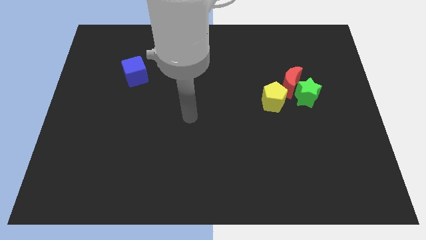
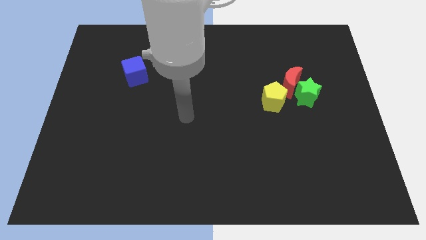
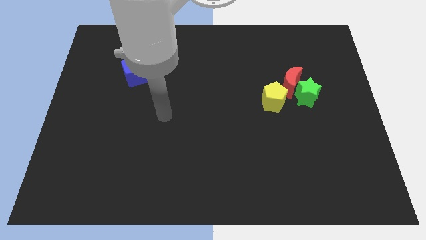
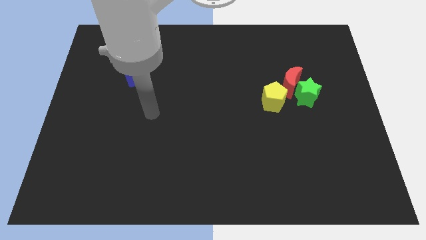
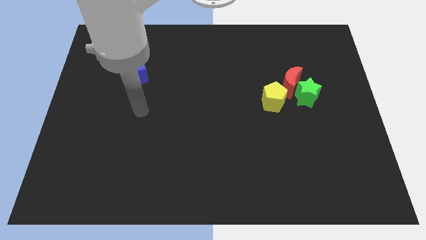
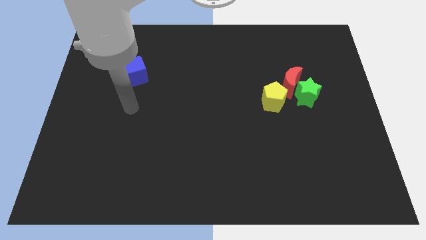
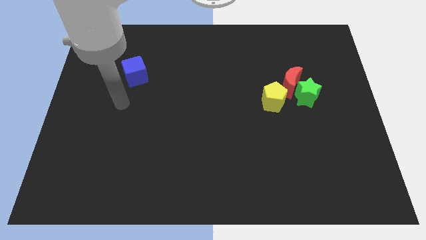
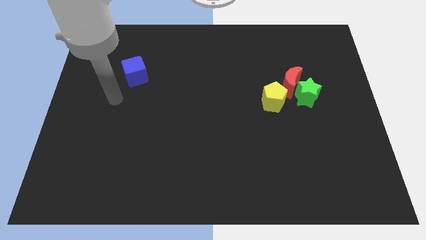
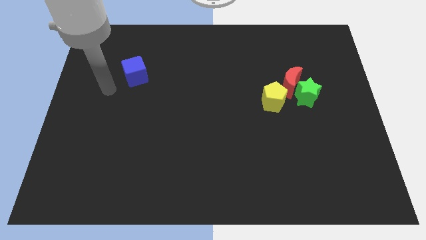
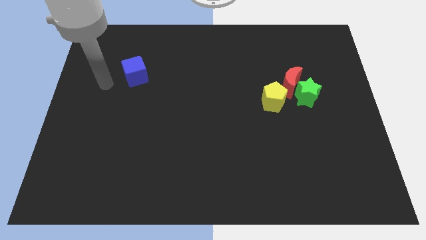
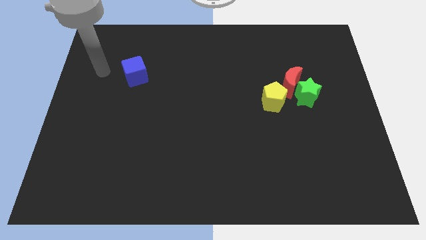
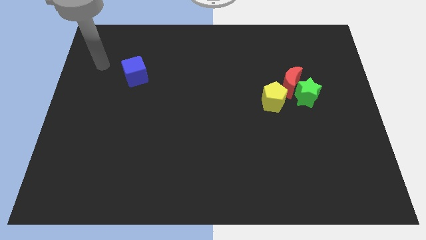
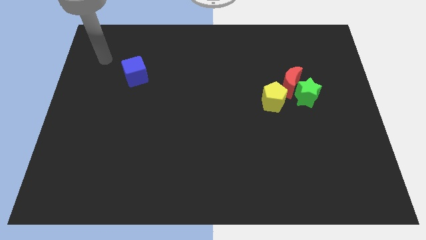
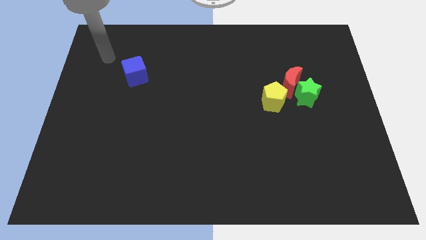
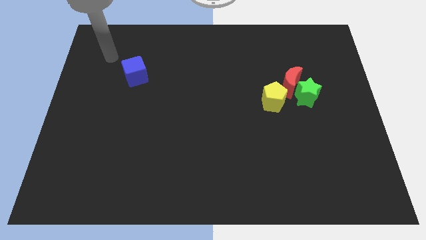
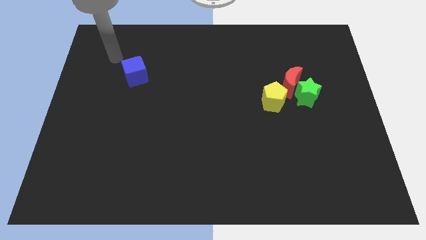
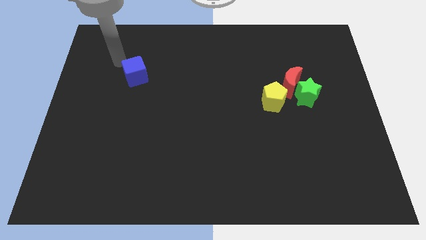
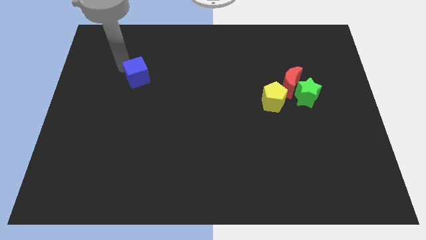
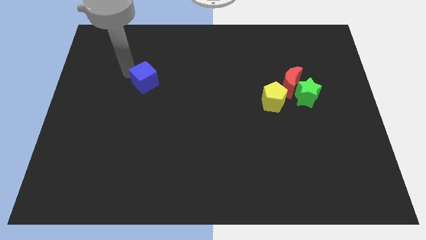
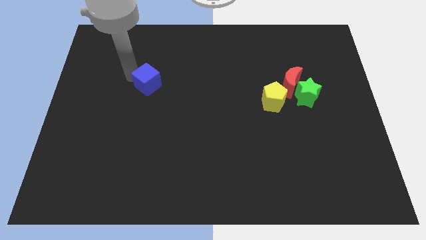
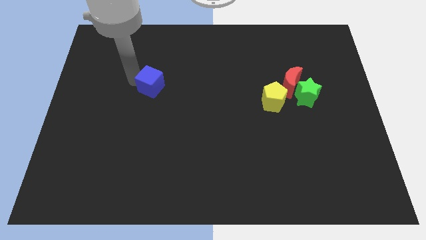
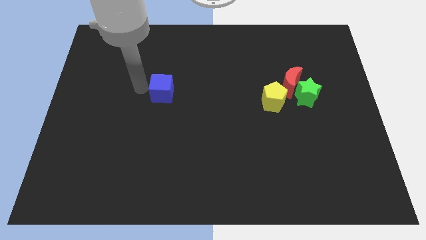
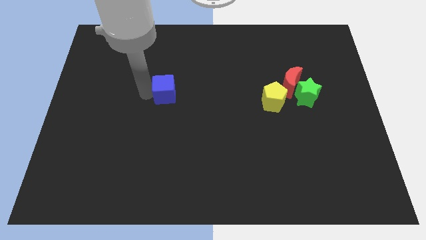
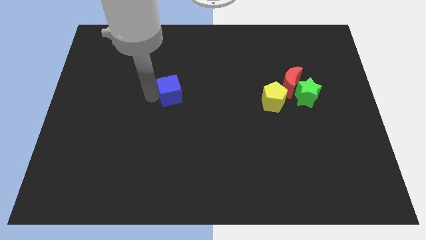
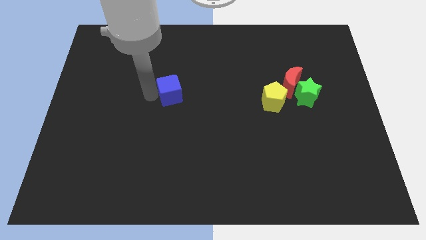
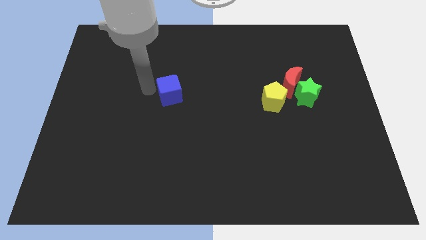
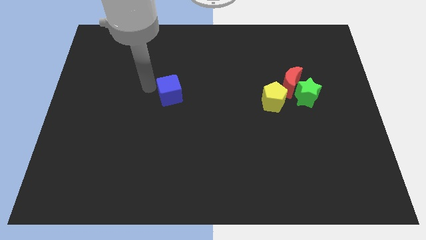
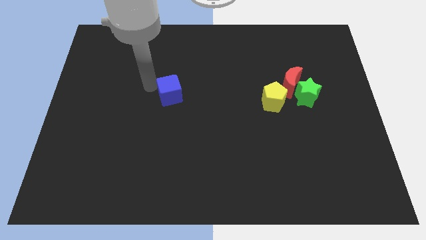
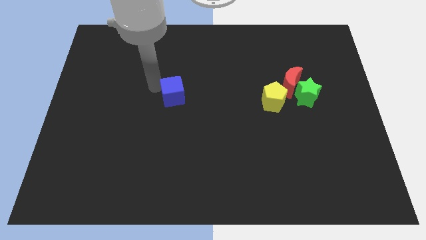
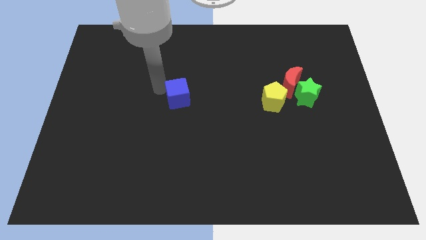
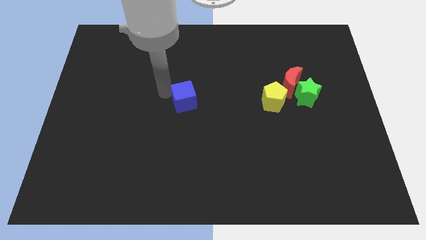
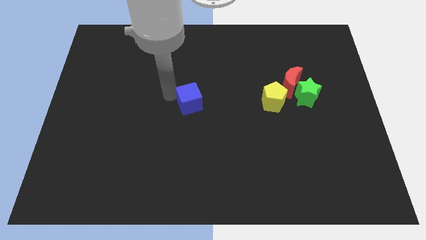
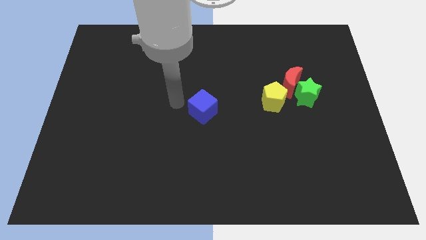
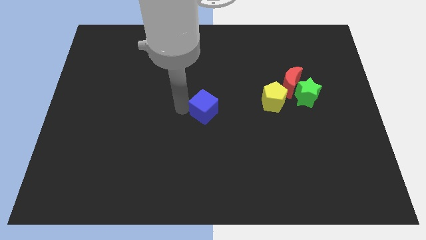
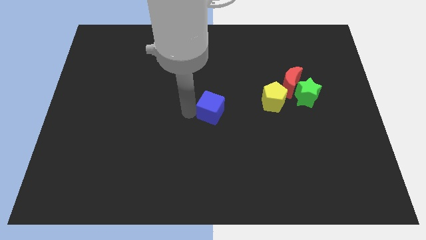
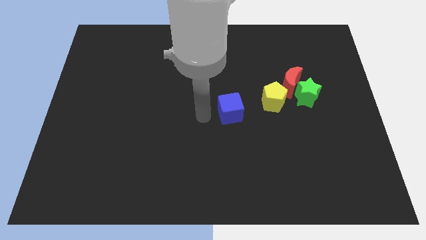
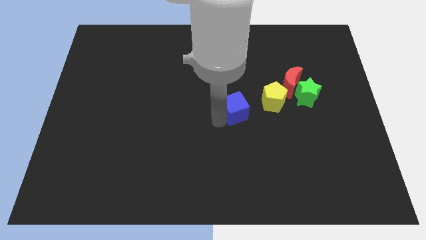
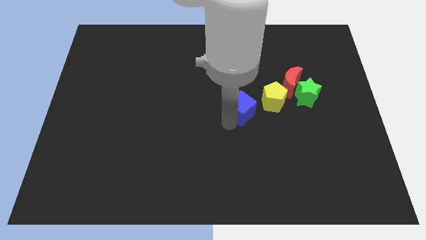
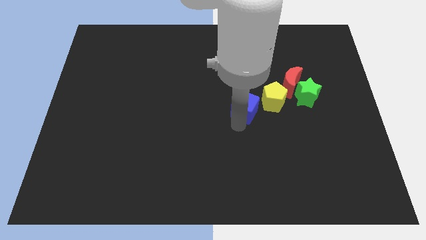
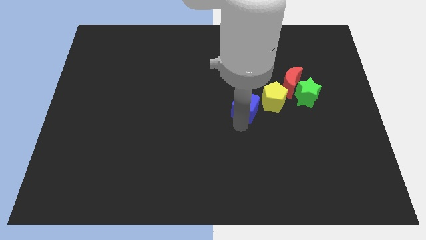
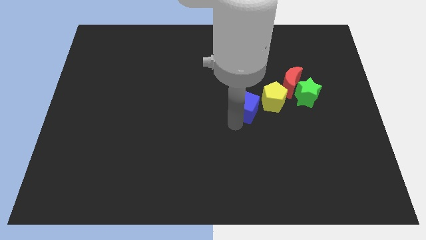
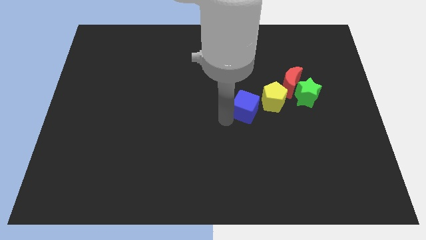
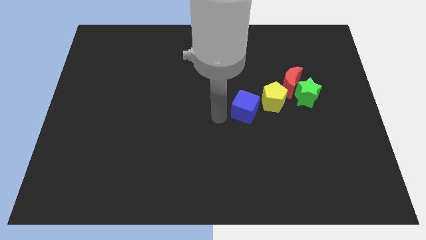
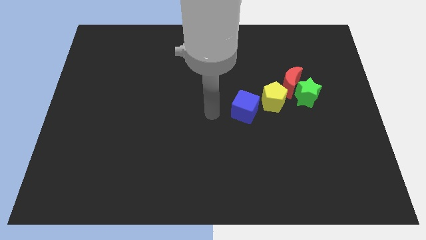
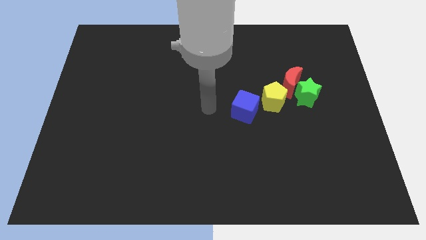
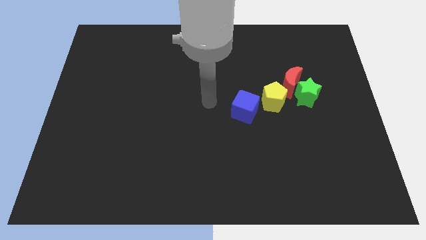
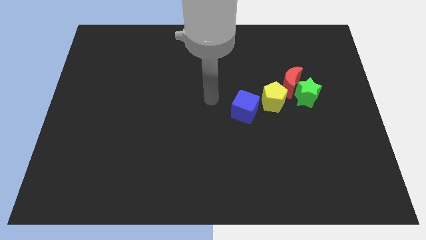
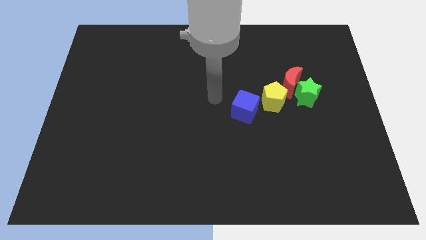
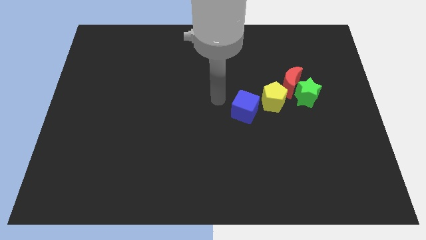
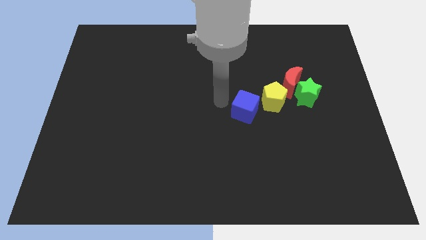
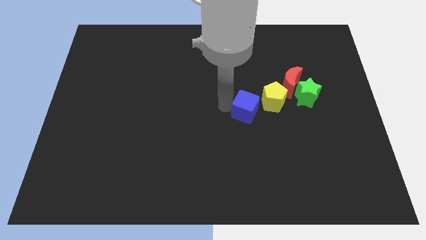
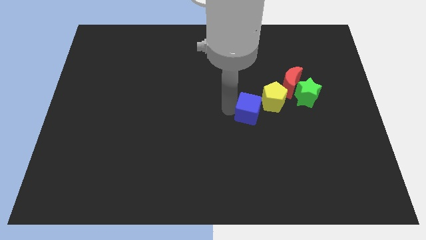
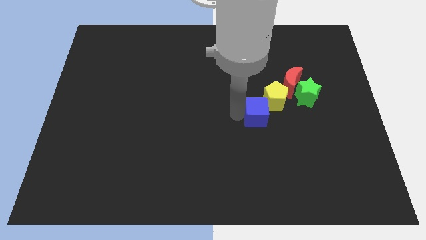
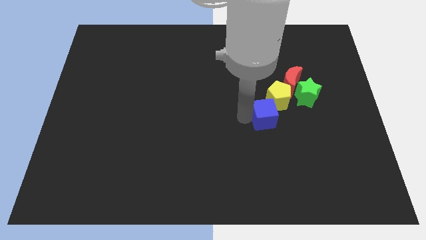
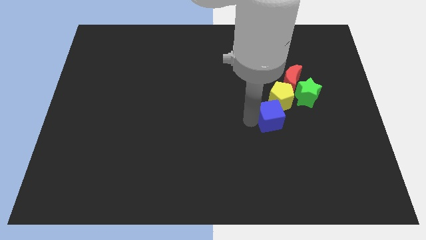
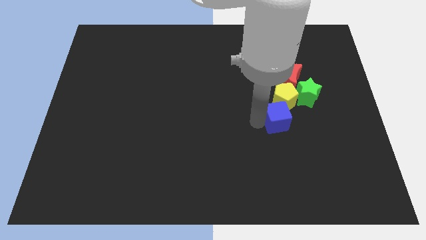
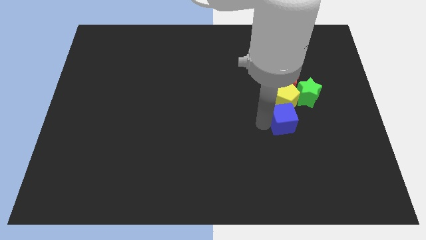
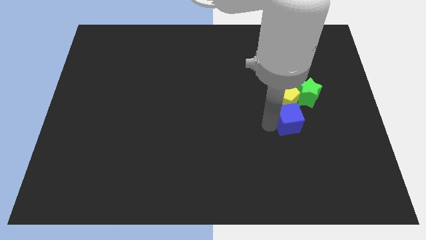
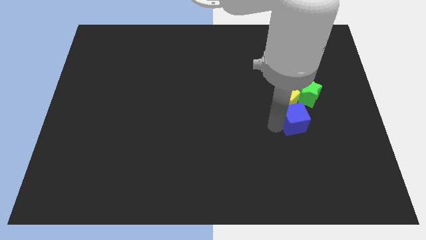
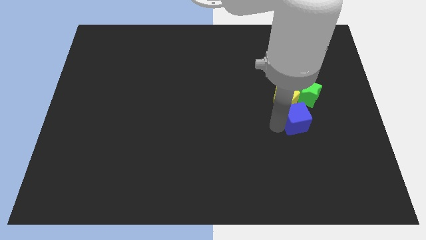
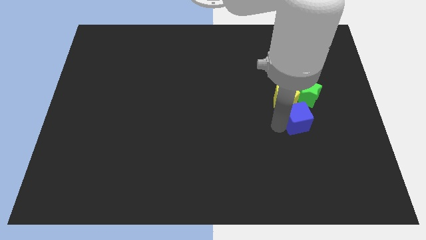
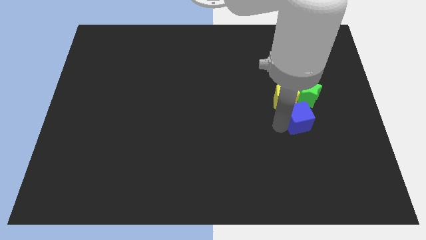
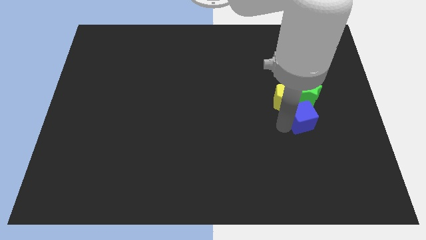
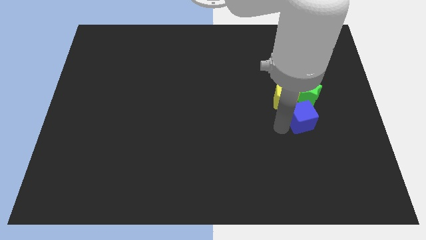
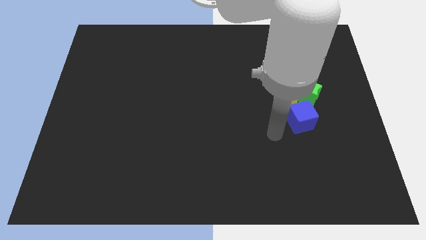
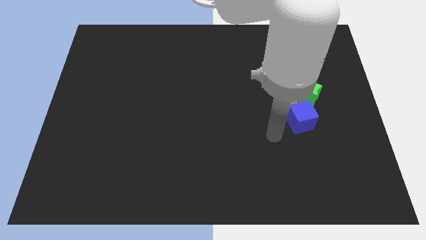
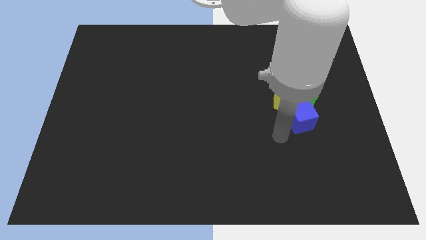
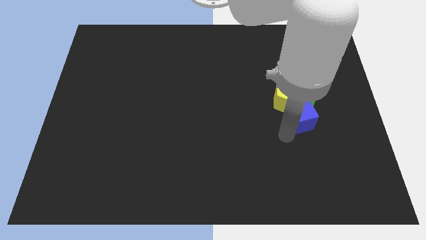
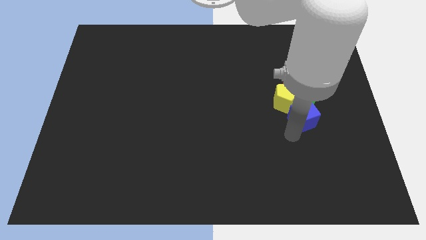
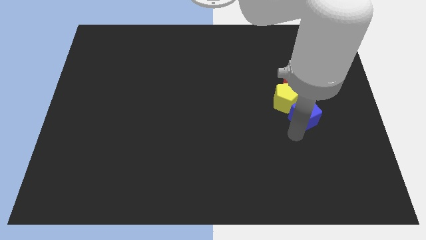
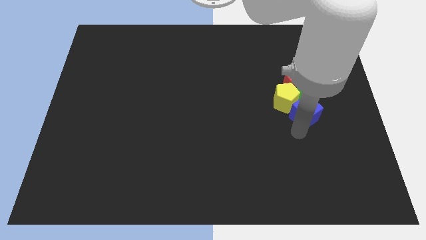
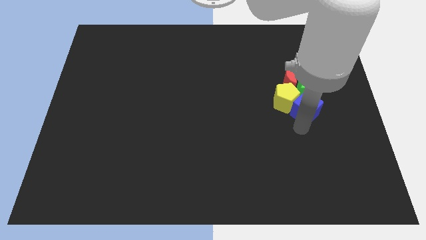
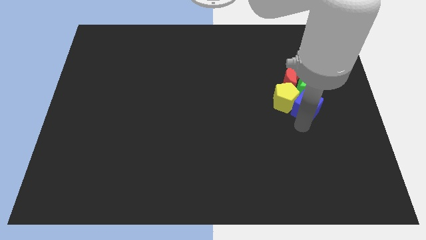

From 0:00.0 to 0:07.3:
push the blue block to the green block

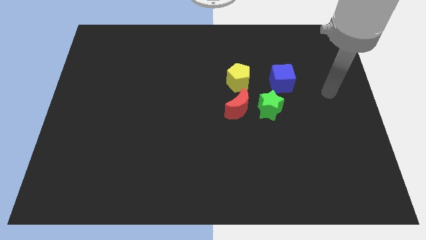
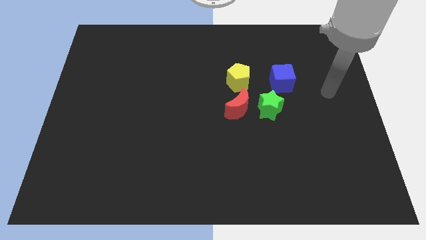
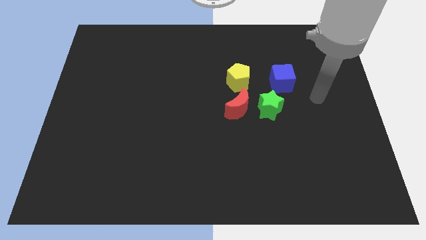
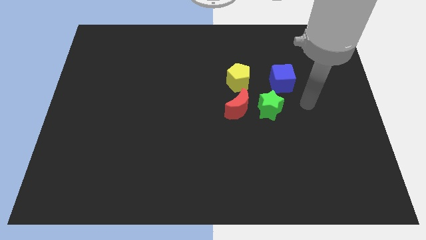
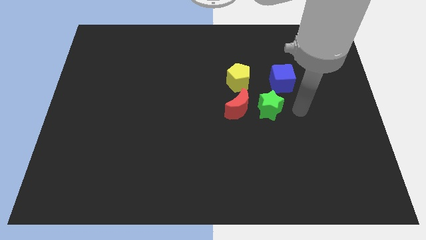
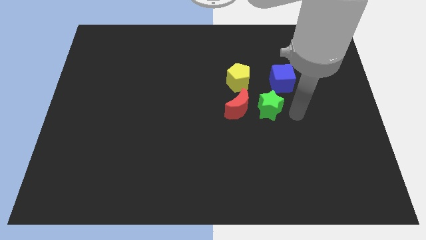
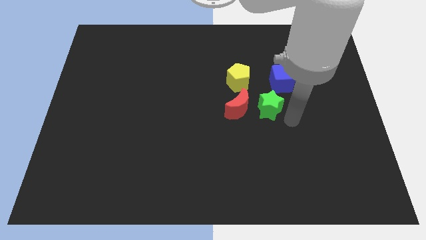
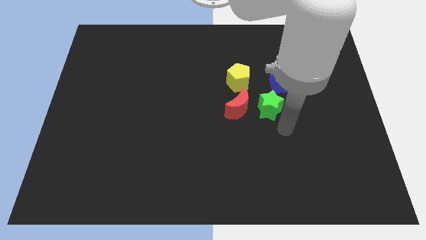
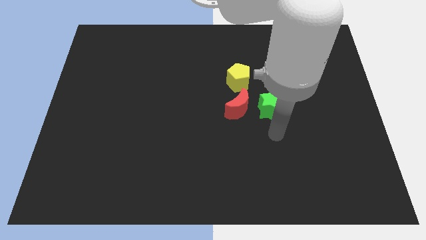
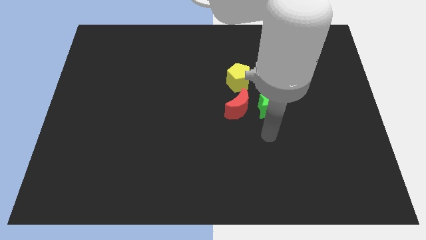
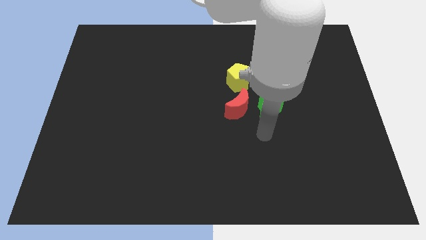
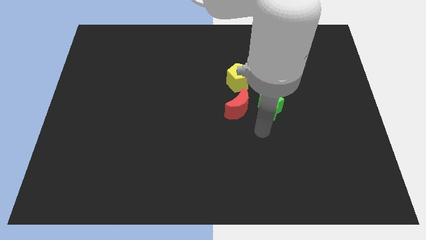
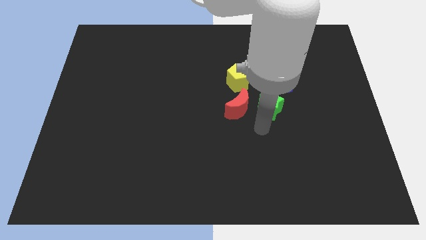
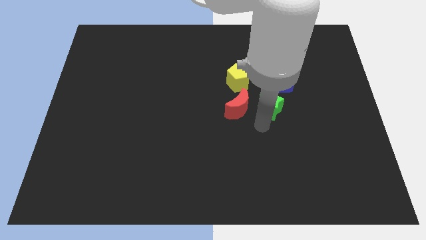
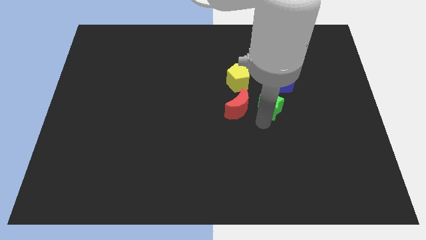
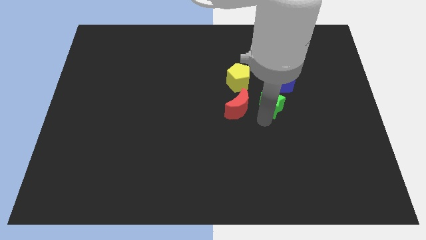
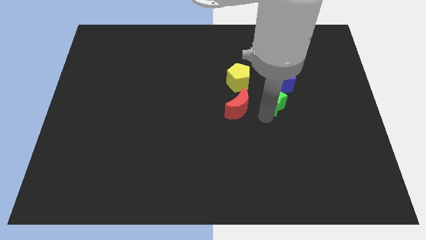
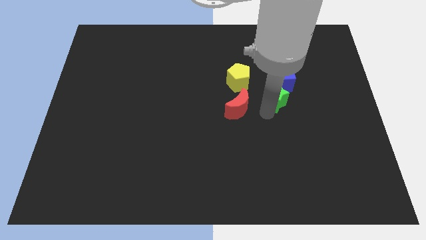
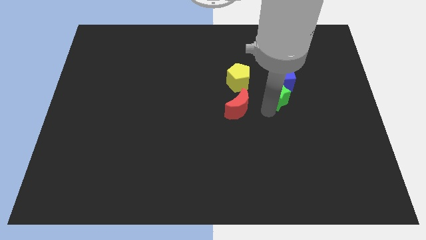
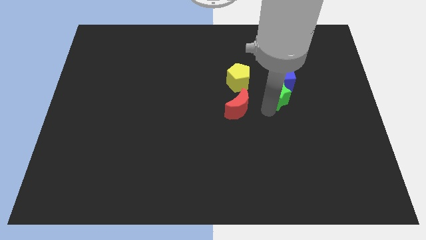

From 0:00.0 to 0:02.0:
put the green block close to the blue cube
